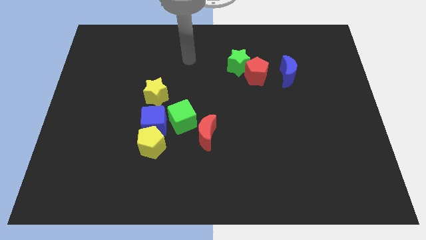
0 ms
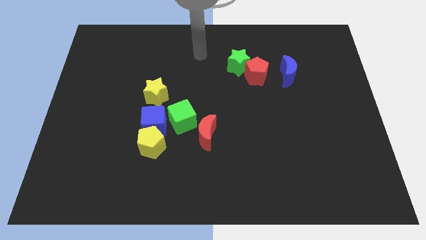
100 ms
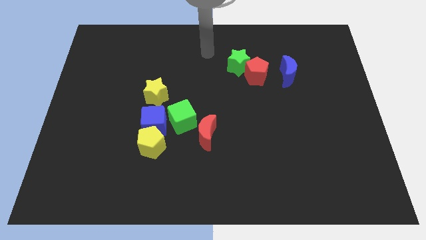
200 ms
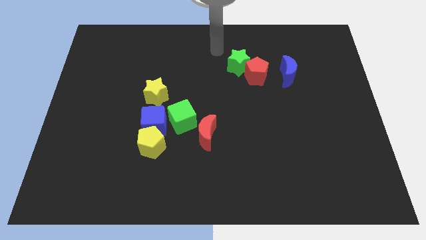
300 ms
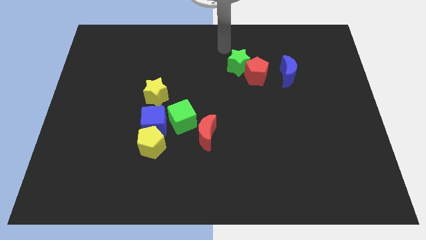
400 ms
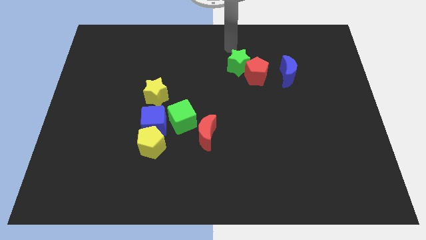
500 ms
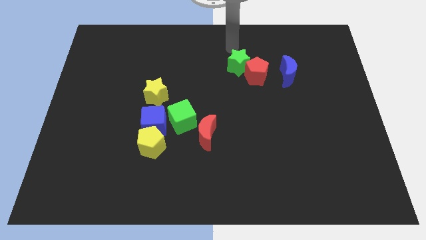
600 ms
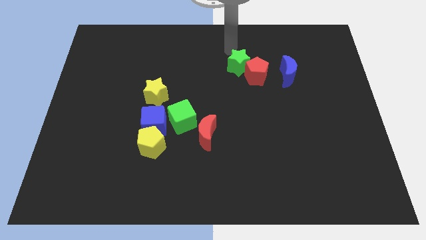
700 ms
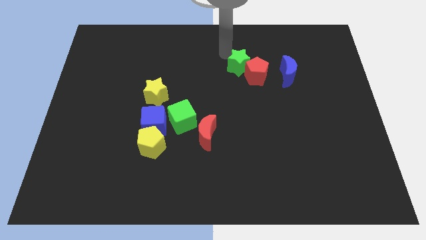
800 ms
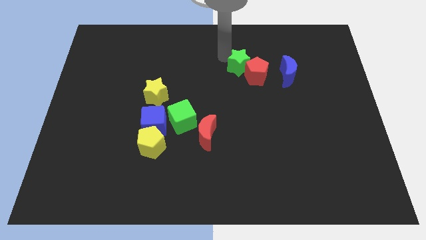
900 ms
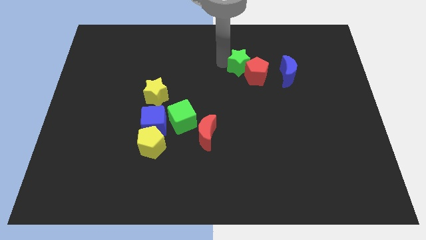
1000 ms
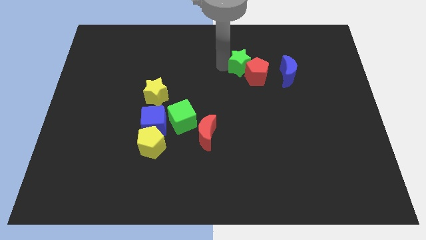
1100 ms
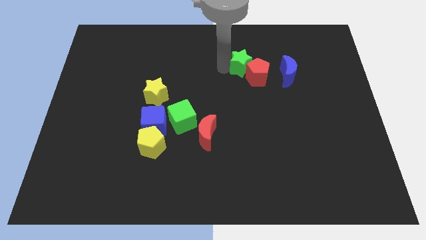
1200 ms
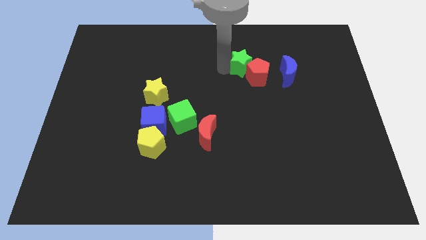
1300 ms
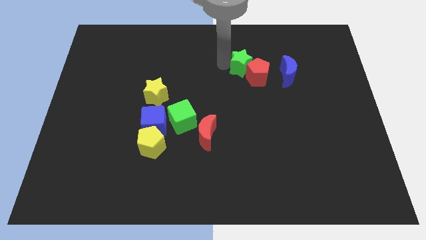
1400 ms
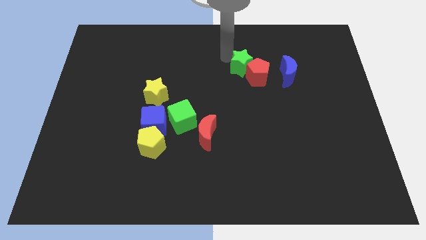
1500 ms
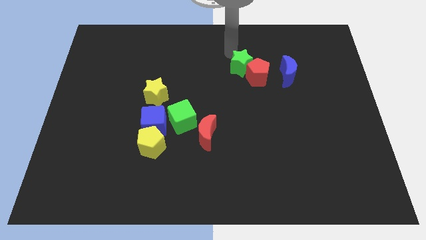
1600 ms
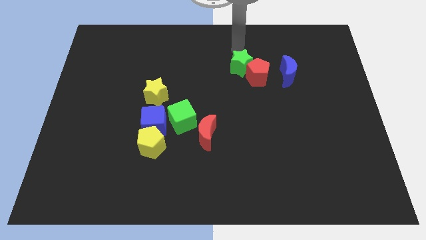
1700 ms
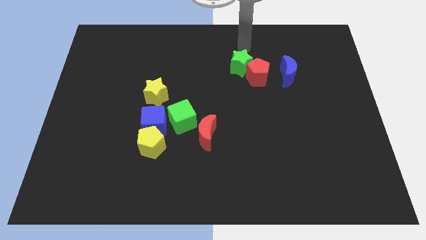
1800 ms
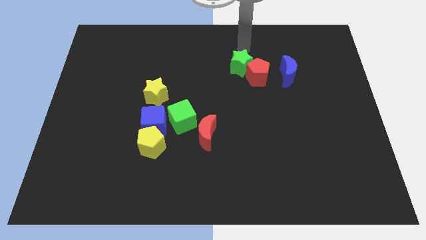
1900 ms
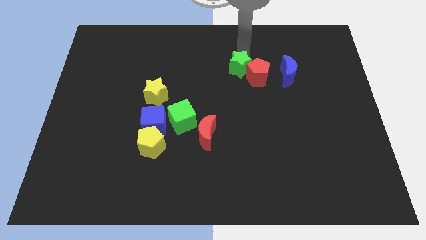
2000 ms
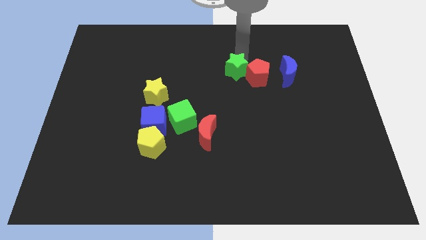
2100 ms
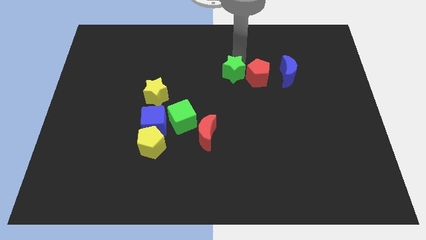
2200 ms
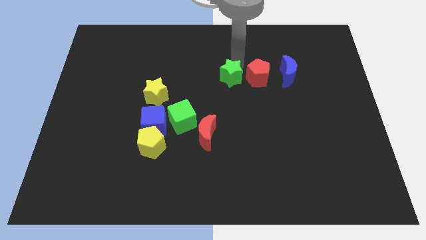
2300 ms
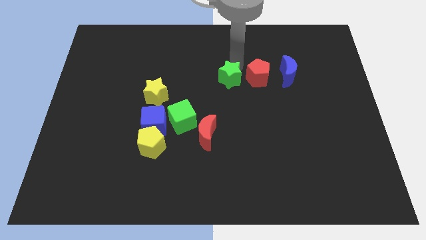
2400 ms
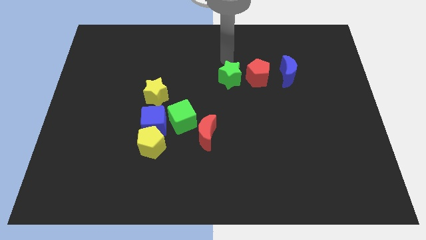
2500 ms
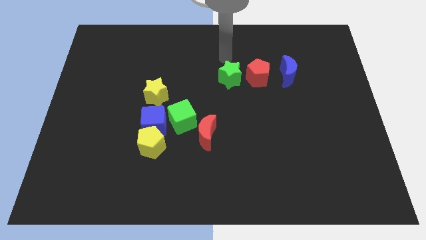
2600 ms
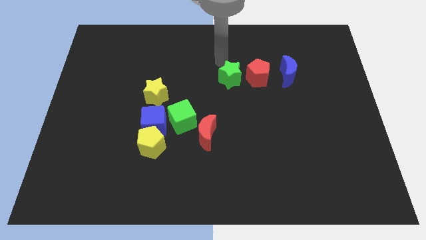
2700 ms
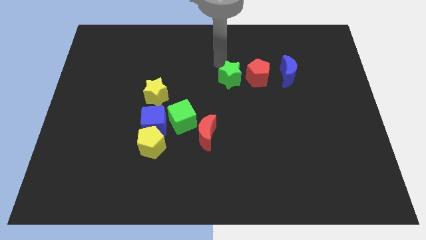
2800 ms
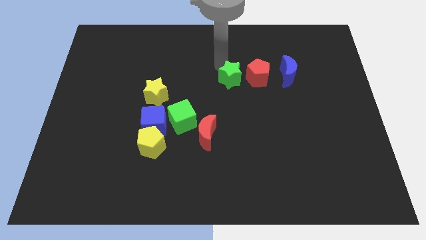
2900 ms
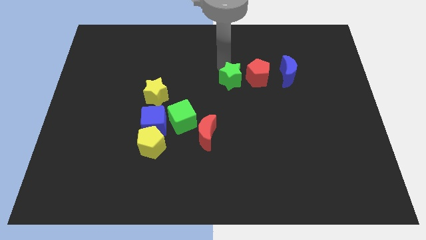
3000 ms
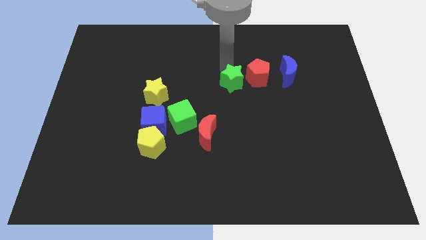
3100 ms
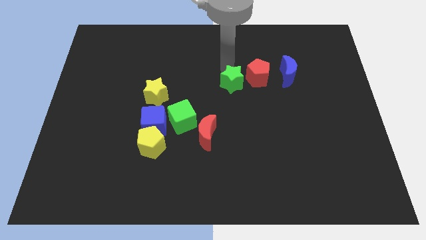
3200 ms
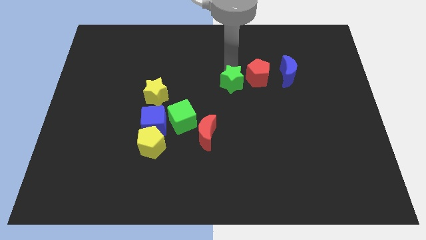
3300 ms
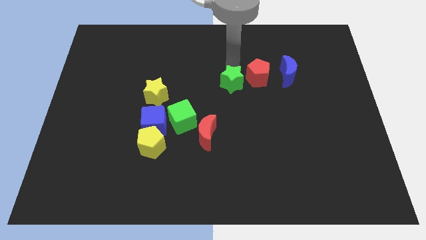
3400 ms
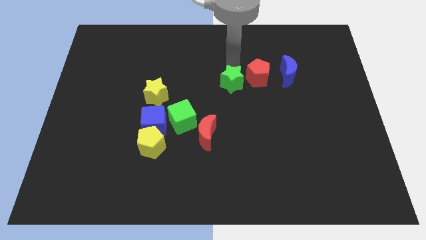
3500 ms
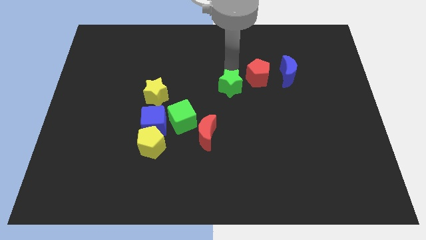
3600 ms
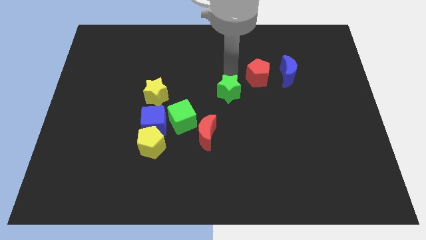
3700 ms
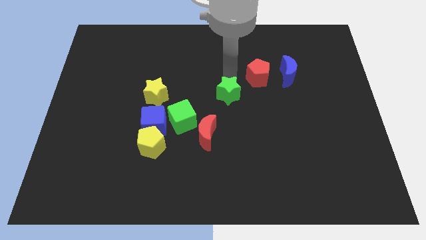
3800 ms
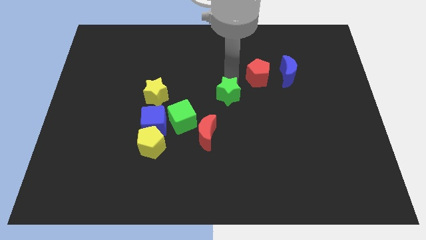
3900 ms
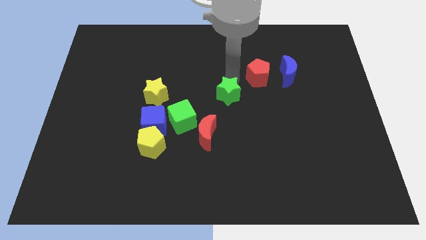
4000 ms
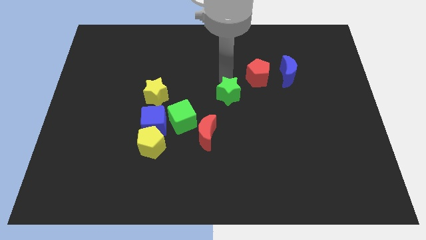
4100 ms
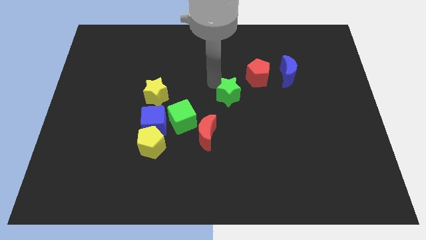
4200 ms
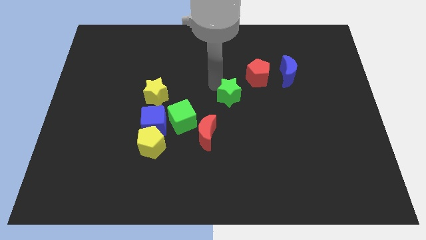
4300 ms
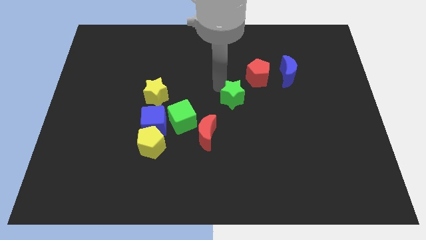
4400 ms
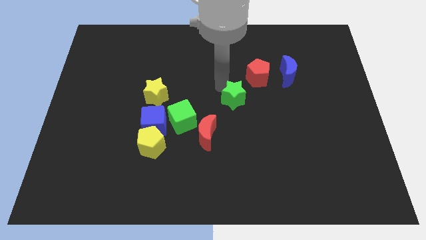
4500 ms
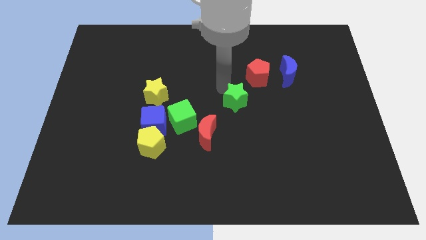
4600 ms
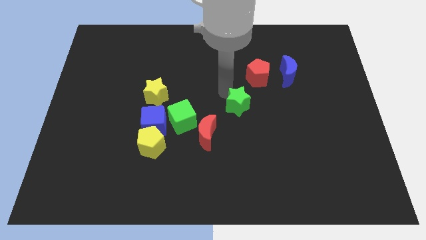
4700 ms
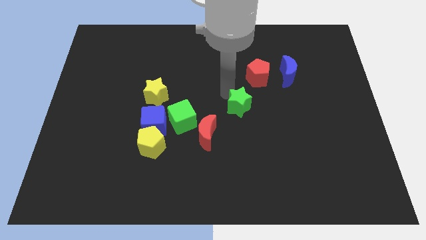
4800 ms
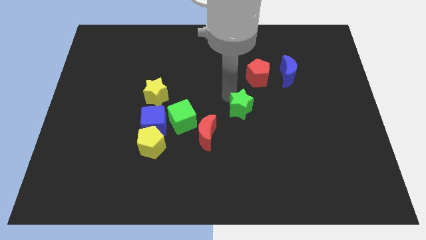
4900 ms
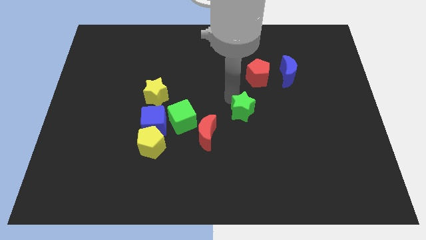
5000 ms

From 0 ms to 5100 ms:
separate green star from red pentagon

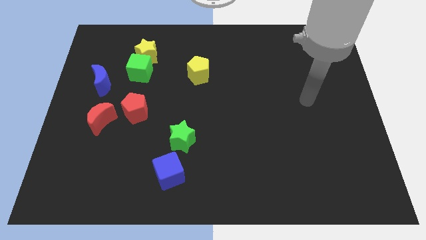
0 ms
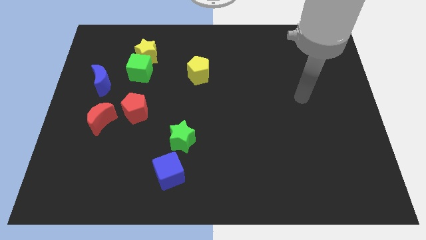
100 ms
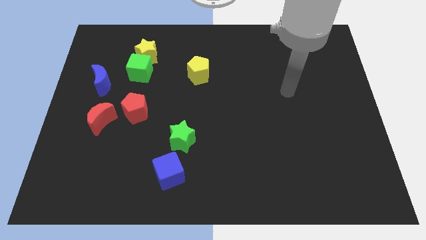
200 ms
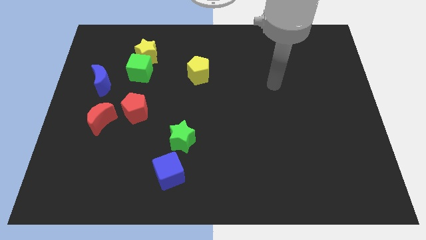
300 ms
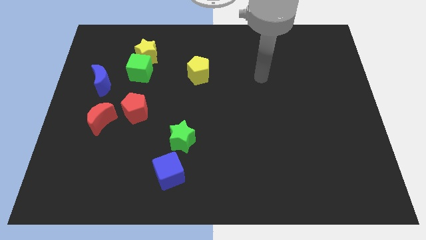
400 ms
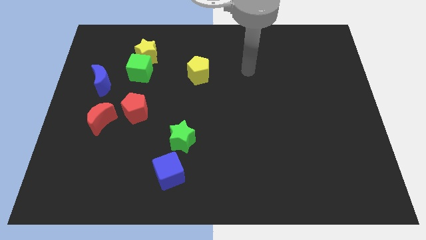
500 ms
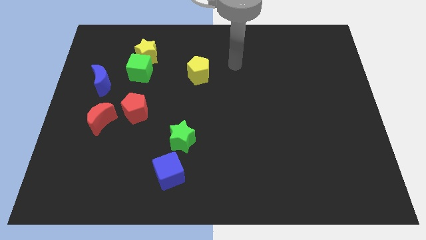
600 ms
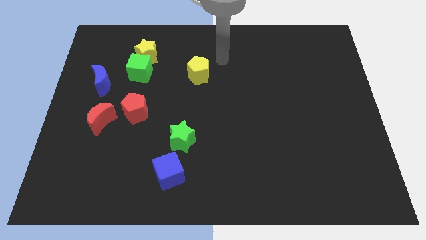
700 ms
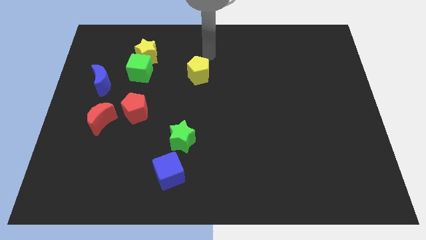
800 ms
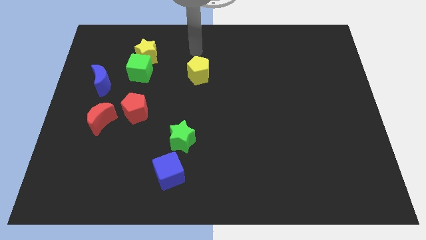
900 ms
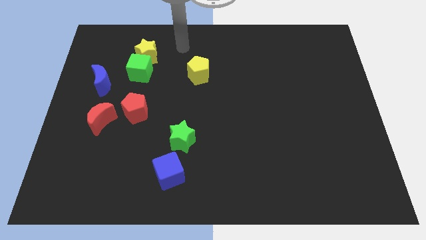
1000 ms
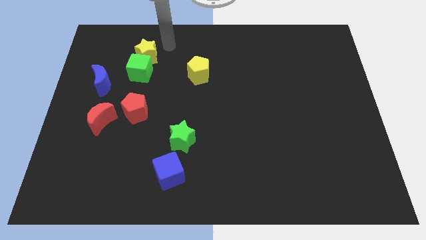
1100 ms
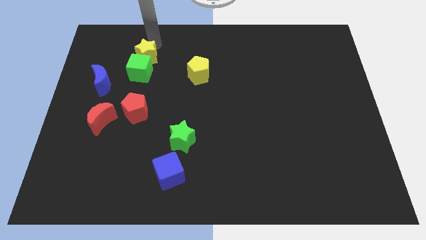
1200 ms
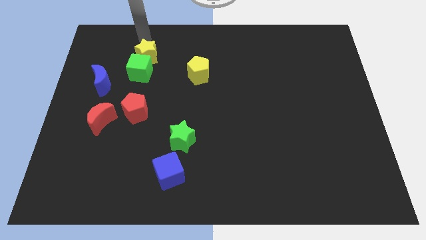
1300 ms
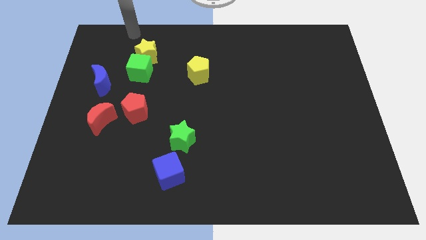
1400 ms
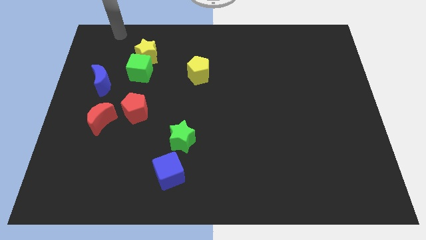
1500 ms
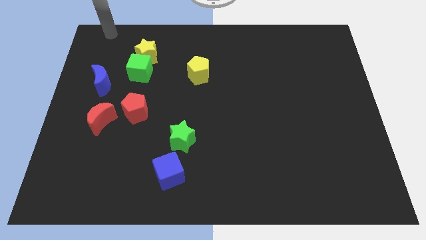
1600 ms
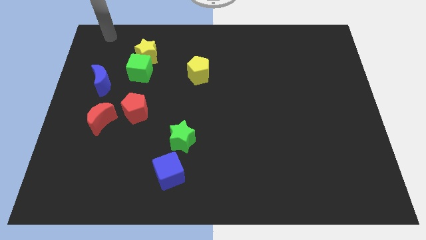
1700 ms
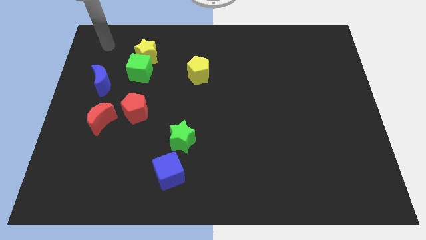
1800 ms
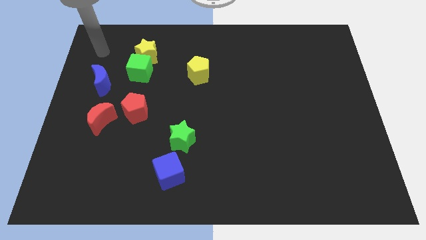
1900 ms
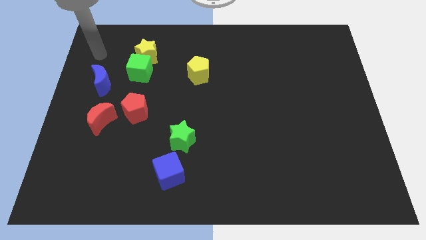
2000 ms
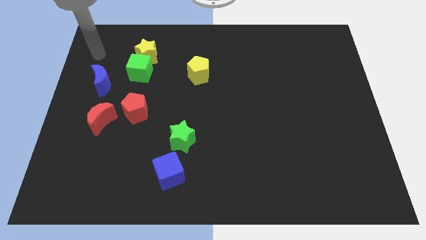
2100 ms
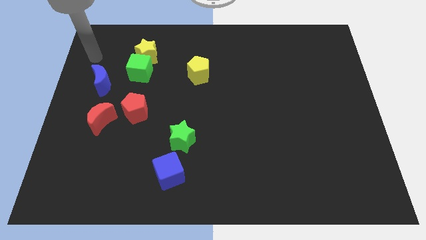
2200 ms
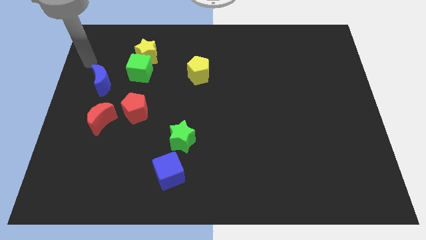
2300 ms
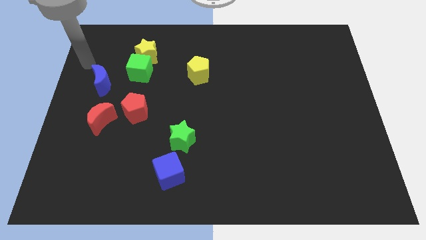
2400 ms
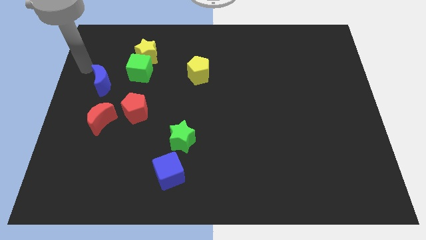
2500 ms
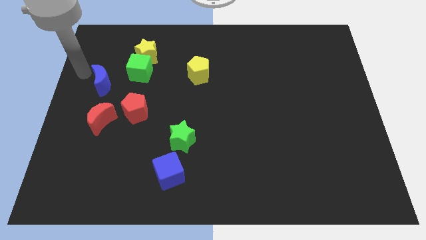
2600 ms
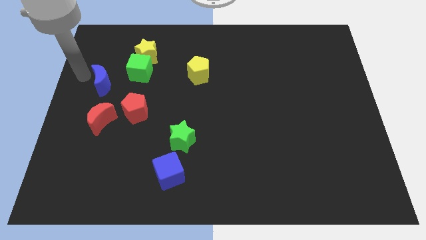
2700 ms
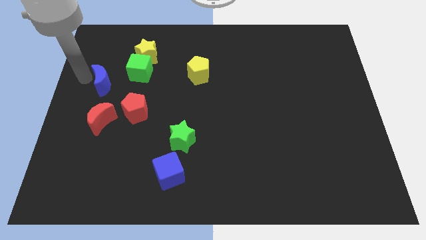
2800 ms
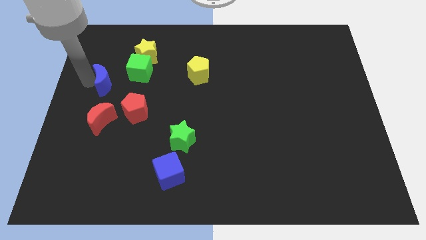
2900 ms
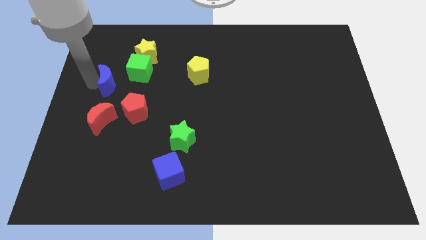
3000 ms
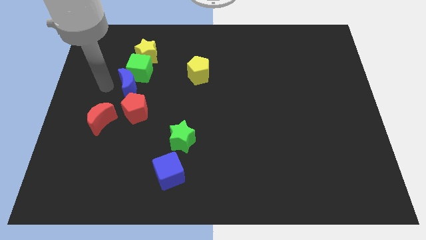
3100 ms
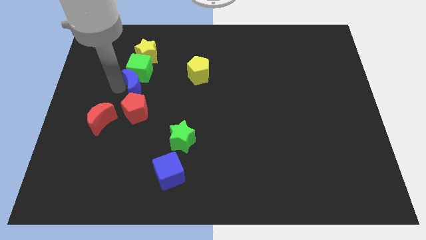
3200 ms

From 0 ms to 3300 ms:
place the blue moon in between green cube and red pentagon

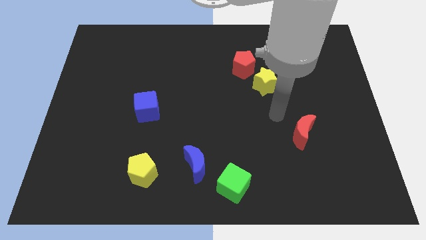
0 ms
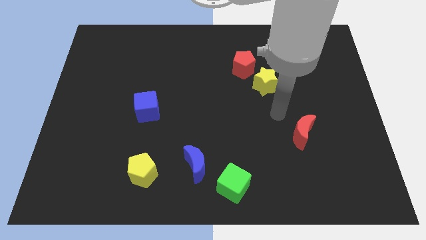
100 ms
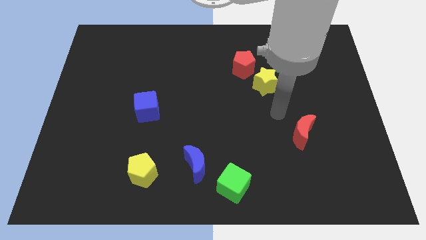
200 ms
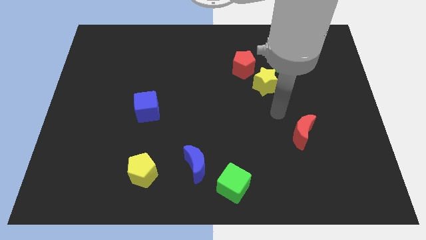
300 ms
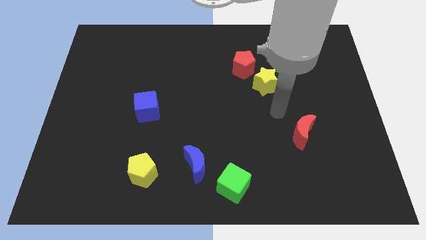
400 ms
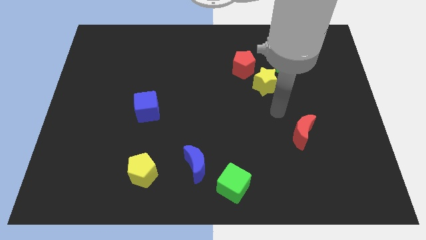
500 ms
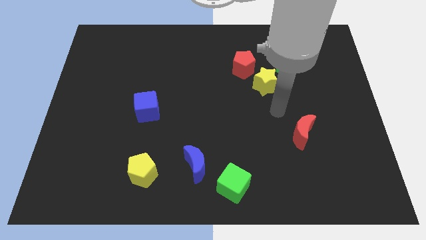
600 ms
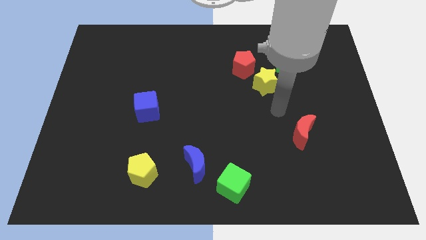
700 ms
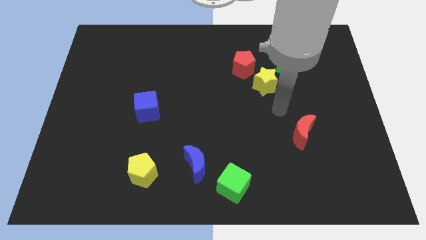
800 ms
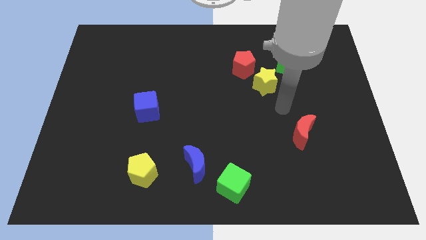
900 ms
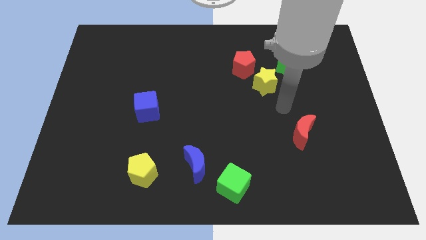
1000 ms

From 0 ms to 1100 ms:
put your hand between the yellow star and red moon
